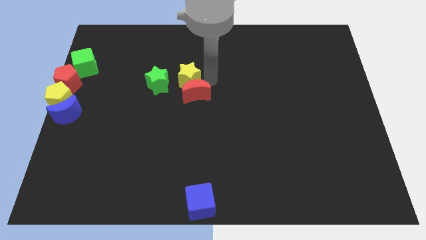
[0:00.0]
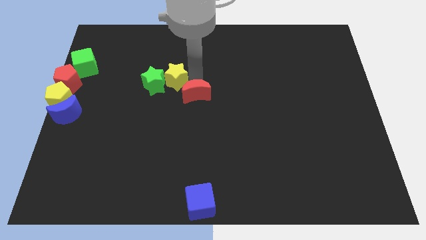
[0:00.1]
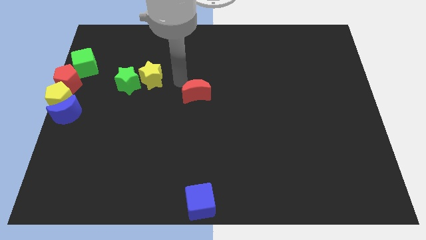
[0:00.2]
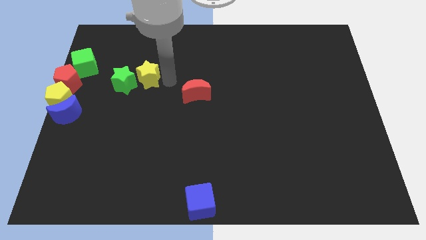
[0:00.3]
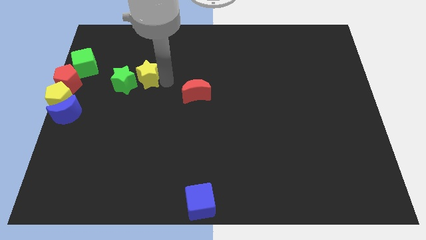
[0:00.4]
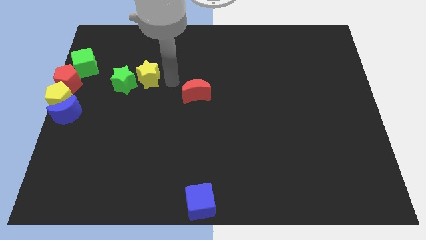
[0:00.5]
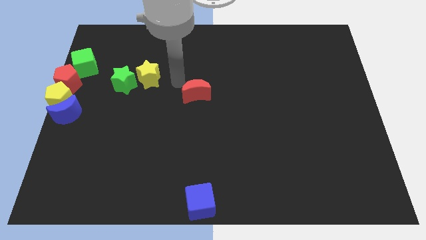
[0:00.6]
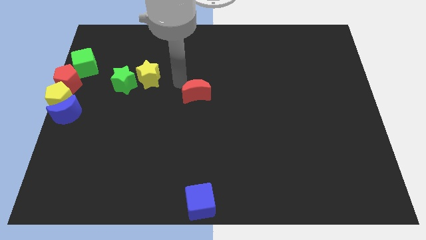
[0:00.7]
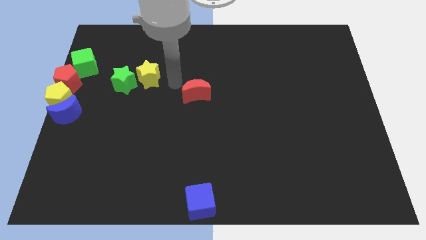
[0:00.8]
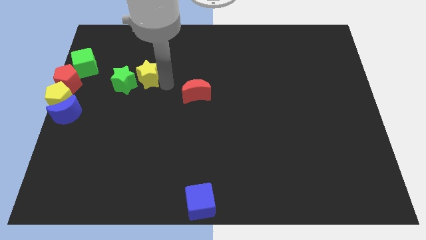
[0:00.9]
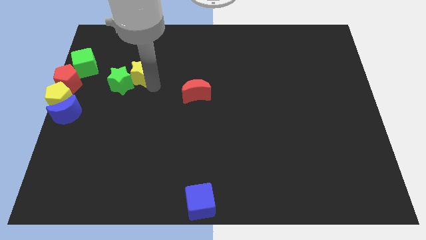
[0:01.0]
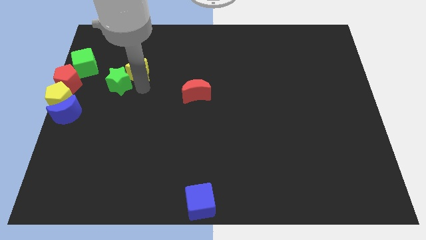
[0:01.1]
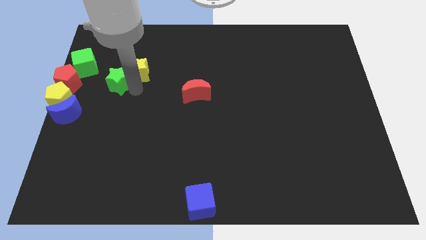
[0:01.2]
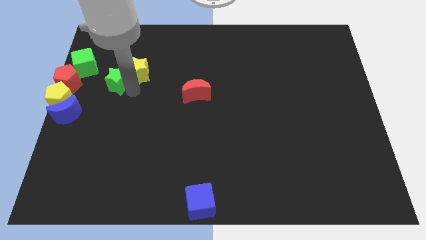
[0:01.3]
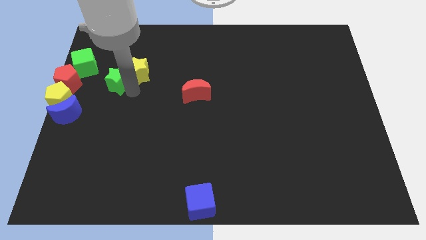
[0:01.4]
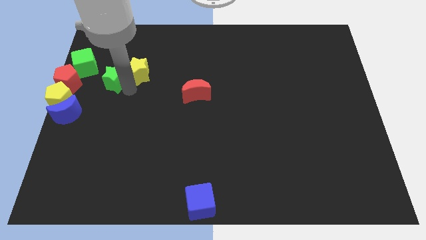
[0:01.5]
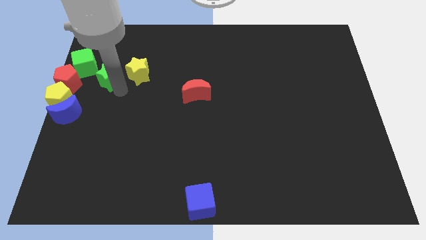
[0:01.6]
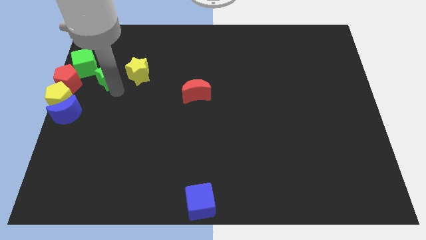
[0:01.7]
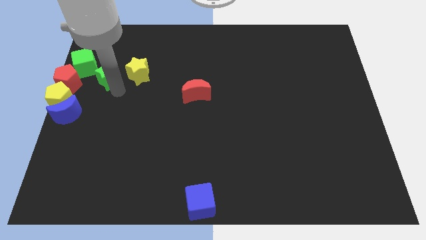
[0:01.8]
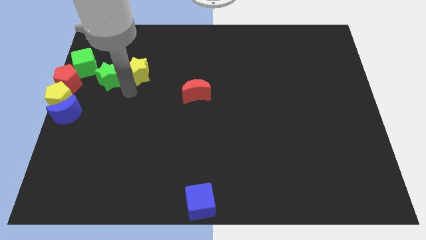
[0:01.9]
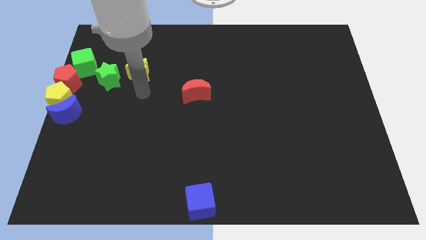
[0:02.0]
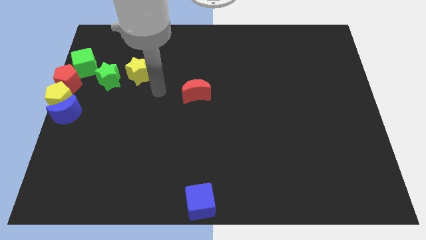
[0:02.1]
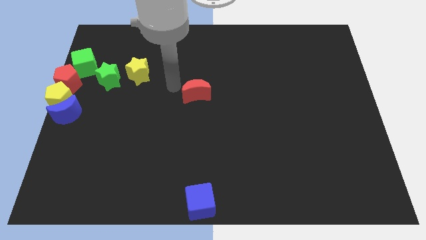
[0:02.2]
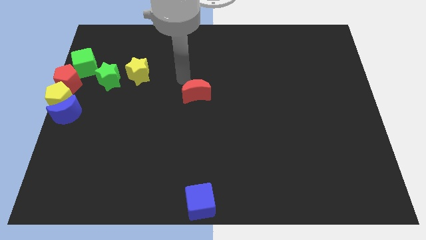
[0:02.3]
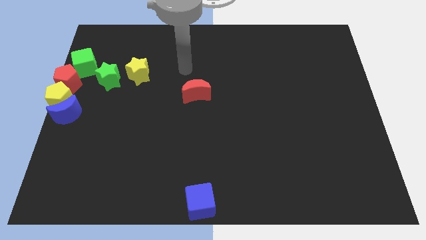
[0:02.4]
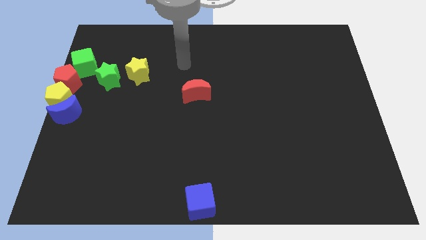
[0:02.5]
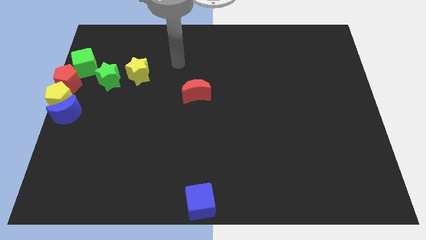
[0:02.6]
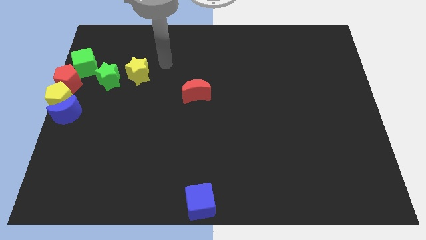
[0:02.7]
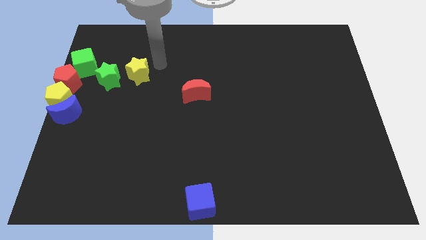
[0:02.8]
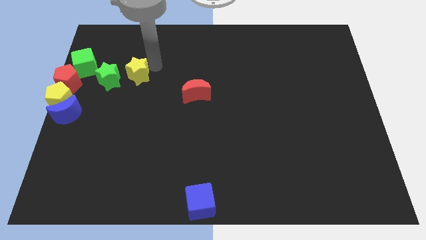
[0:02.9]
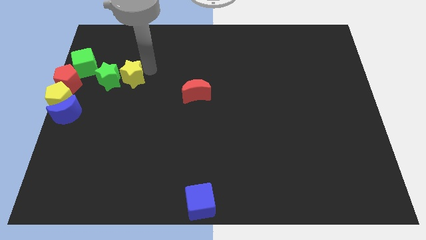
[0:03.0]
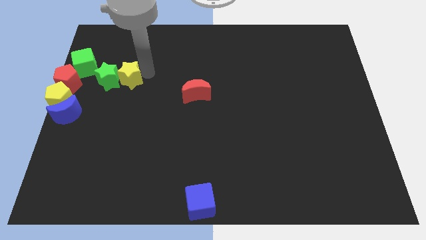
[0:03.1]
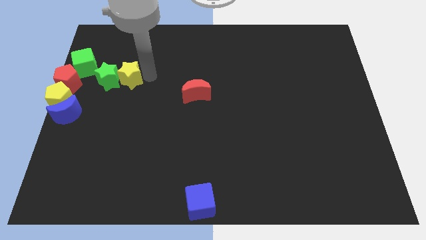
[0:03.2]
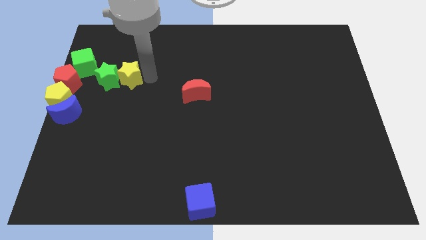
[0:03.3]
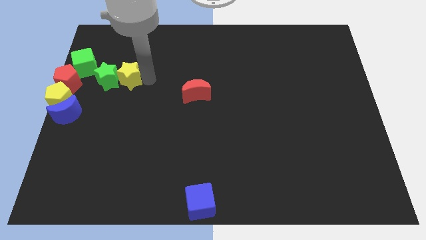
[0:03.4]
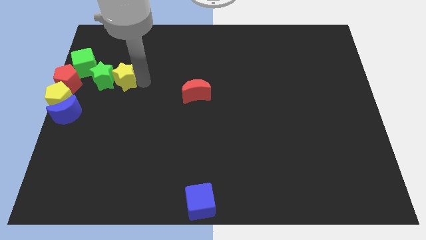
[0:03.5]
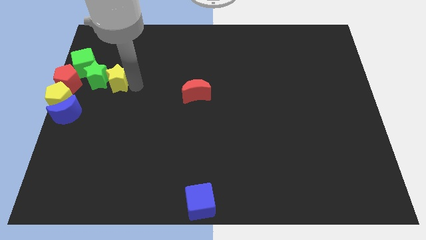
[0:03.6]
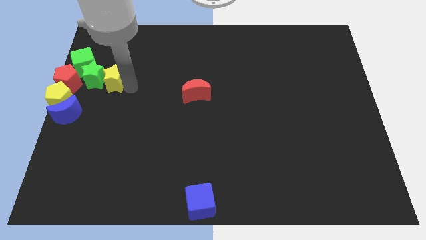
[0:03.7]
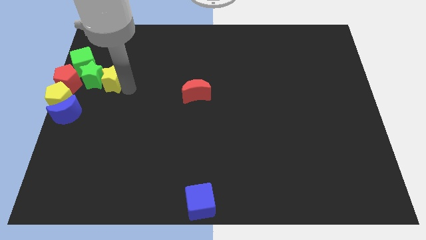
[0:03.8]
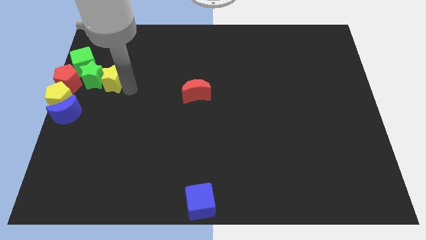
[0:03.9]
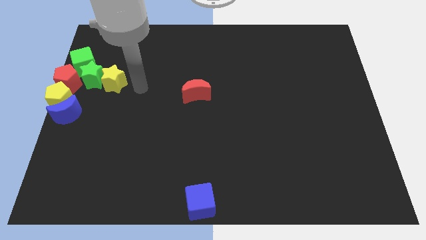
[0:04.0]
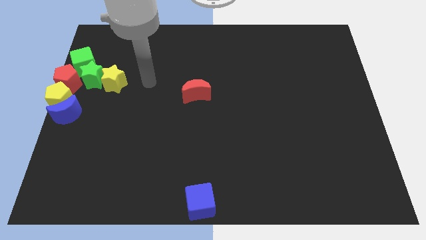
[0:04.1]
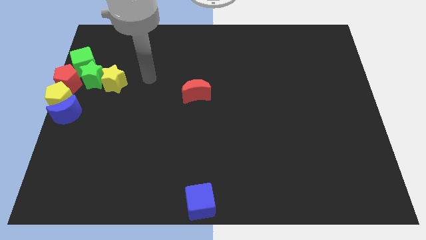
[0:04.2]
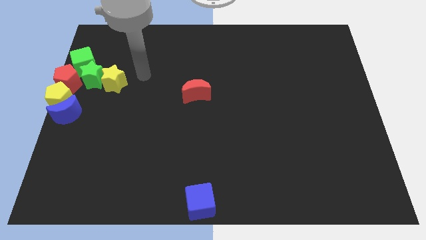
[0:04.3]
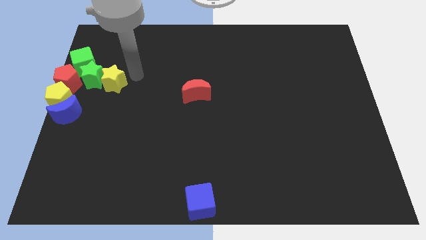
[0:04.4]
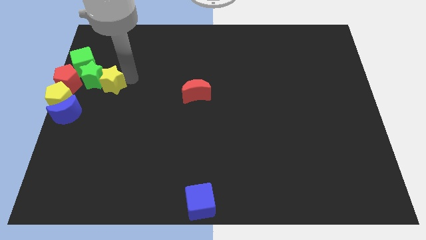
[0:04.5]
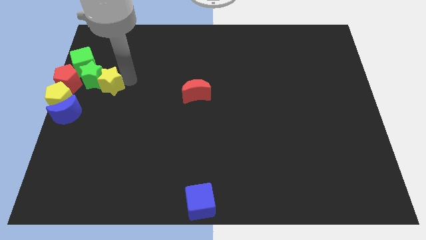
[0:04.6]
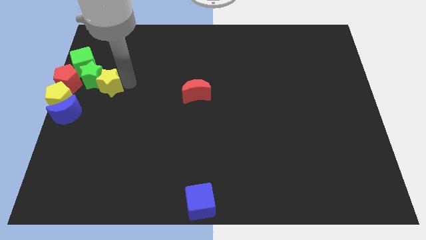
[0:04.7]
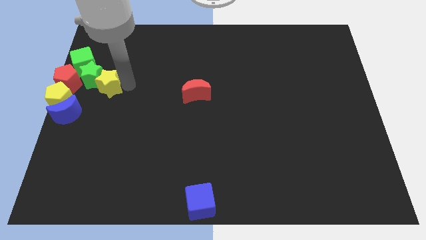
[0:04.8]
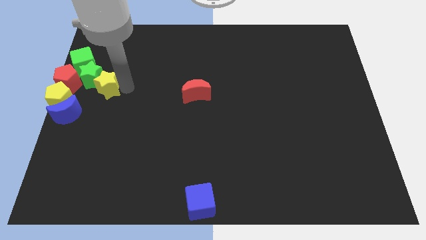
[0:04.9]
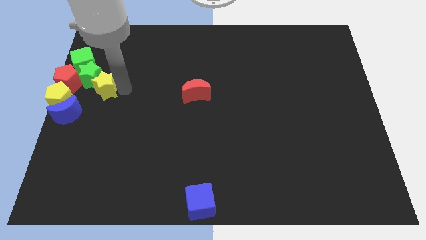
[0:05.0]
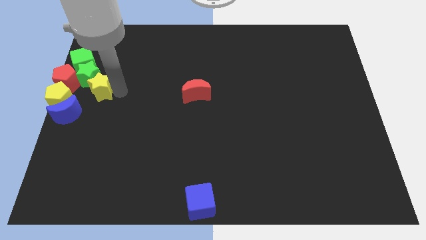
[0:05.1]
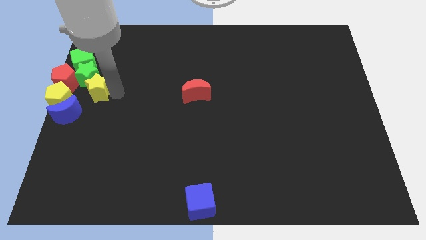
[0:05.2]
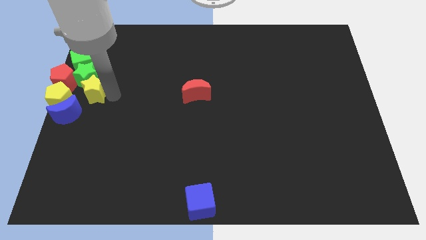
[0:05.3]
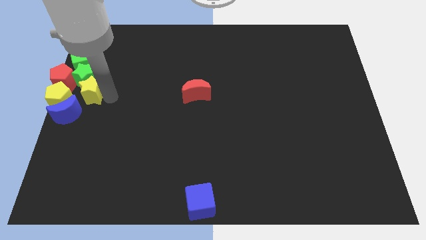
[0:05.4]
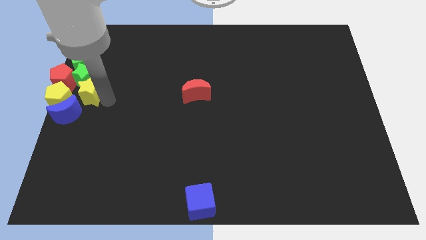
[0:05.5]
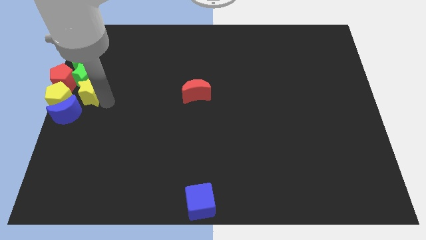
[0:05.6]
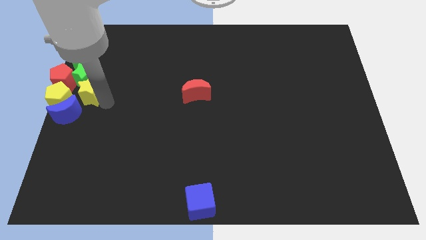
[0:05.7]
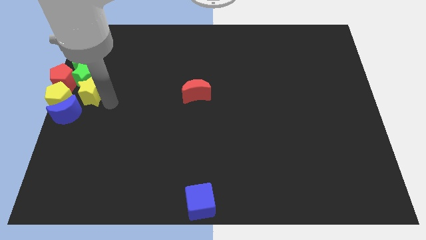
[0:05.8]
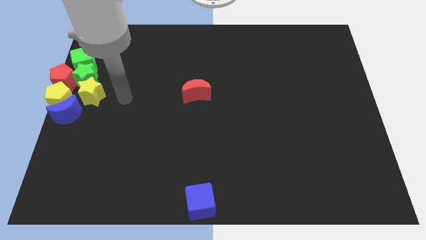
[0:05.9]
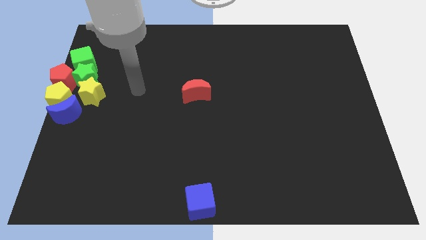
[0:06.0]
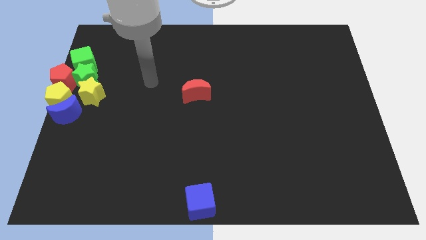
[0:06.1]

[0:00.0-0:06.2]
push the green and yellow stars into the red pentagon

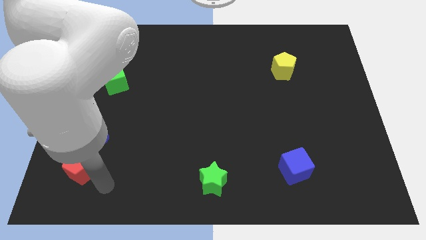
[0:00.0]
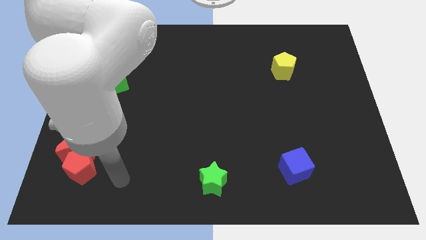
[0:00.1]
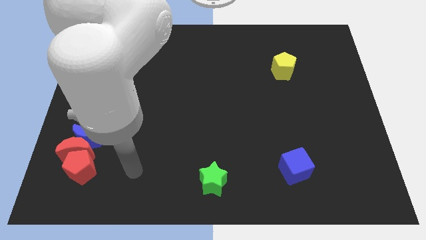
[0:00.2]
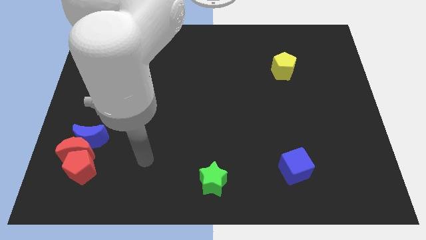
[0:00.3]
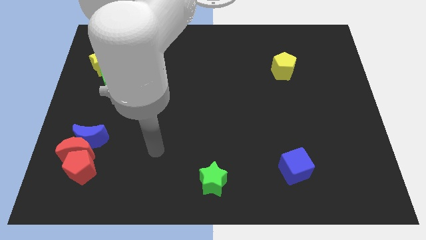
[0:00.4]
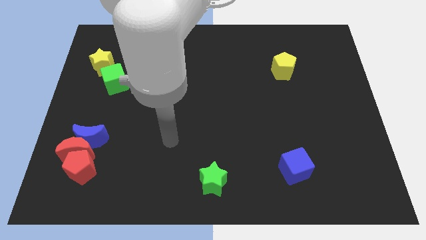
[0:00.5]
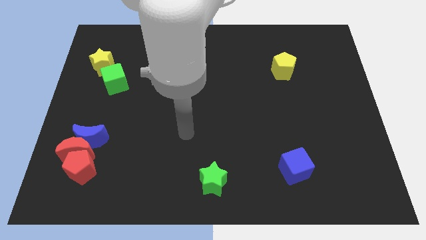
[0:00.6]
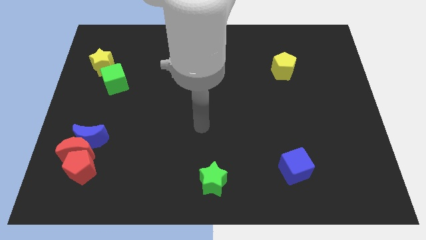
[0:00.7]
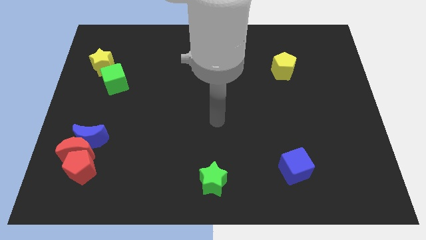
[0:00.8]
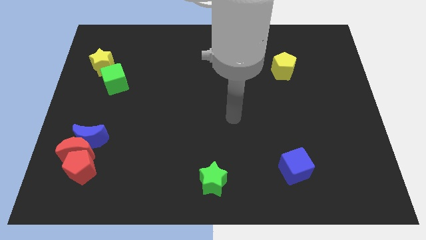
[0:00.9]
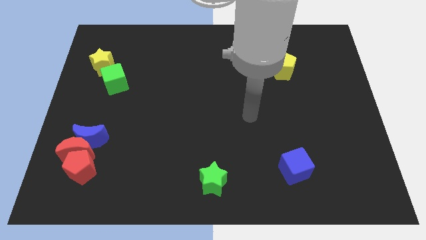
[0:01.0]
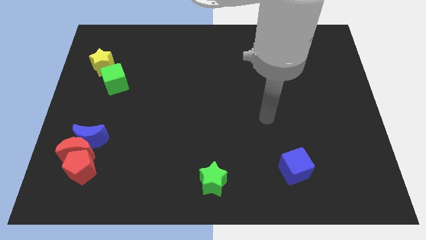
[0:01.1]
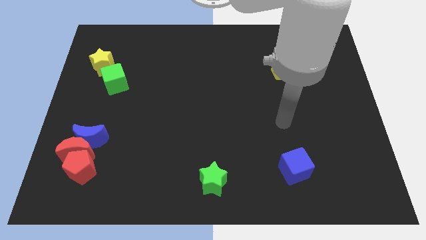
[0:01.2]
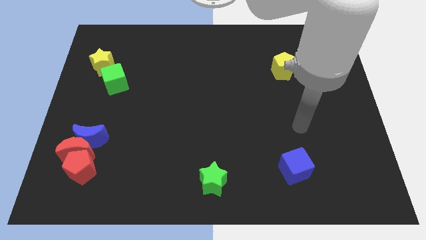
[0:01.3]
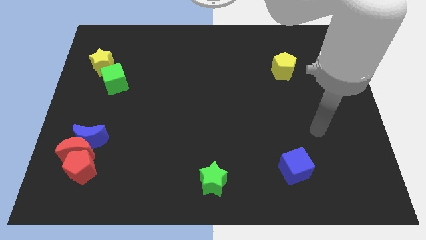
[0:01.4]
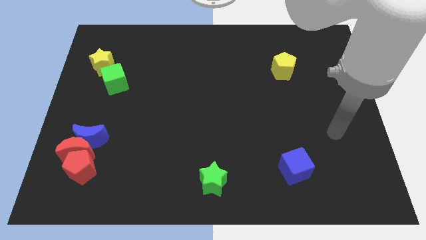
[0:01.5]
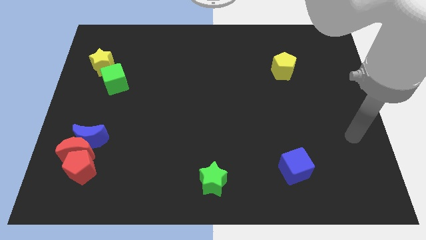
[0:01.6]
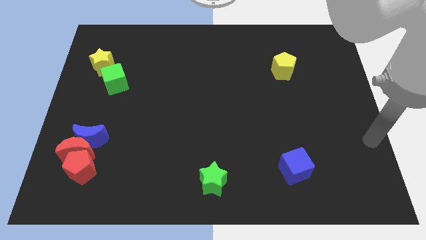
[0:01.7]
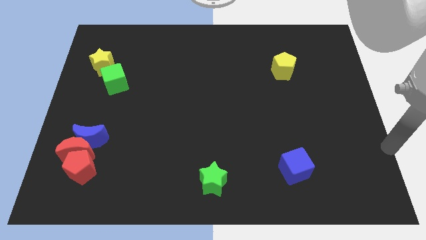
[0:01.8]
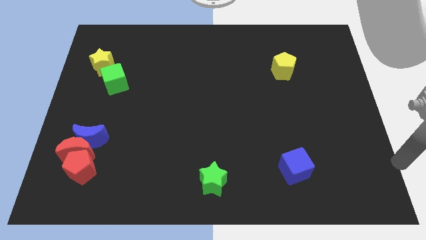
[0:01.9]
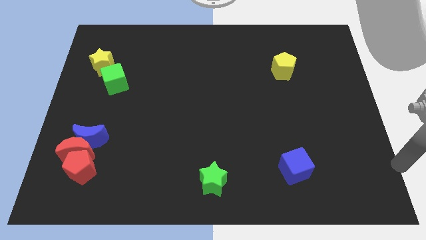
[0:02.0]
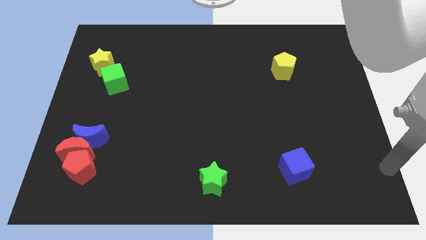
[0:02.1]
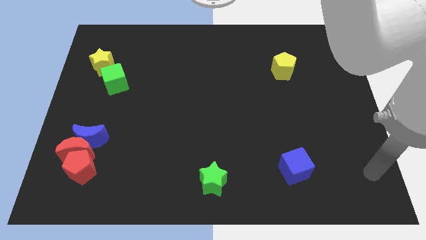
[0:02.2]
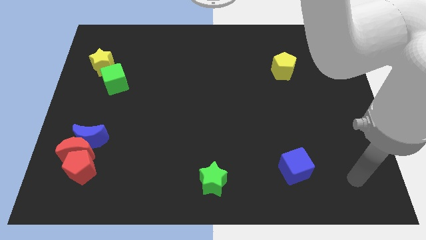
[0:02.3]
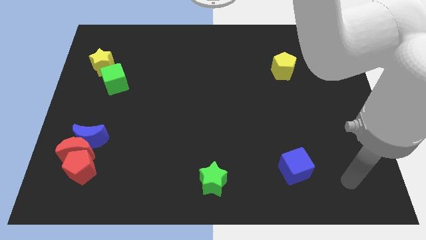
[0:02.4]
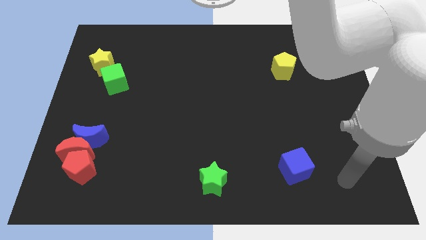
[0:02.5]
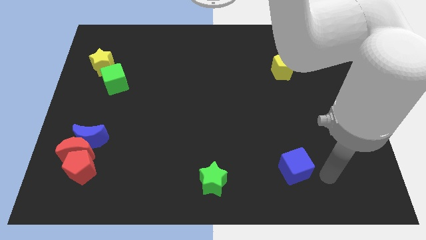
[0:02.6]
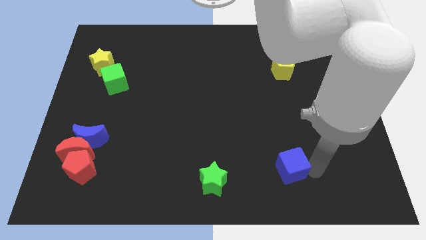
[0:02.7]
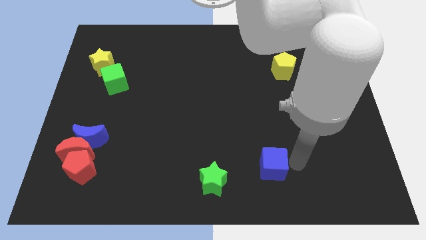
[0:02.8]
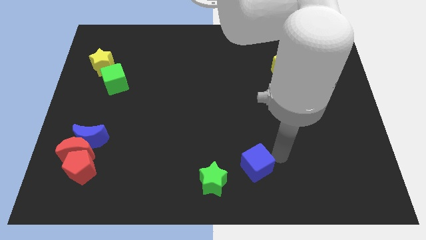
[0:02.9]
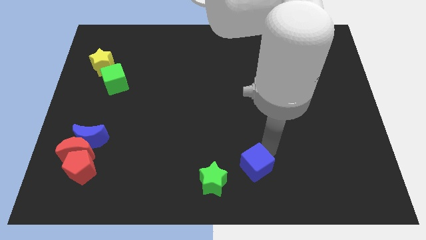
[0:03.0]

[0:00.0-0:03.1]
push the blue cube to the left of the board
